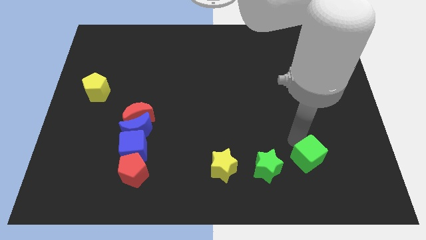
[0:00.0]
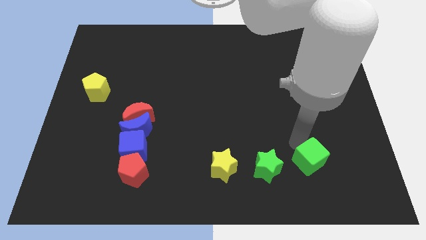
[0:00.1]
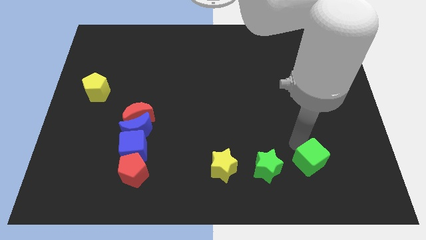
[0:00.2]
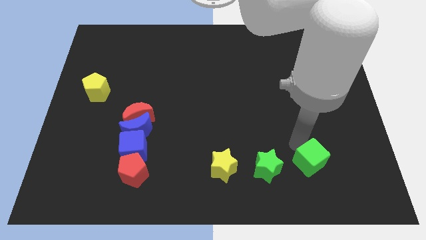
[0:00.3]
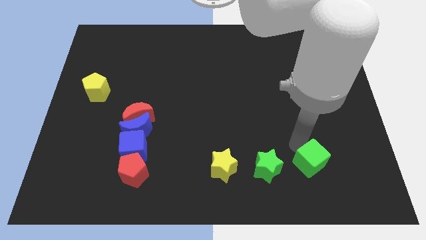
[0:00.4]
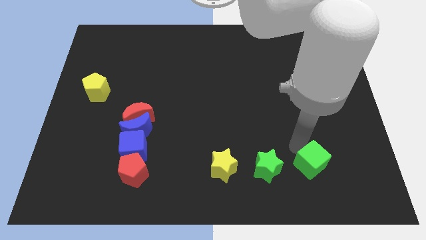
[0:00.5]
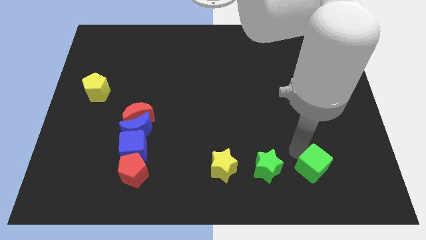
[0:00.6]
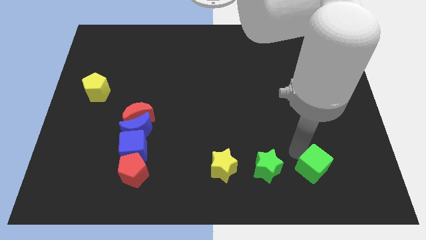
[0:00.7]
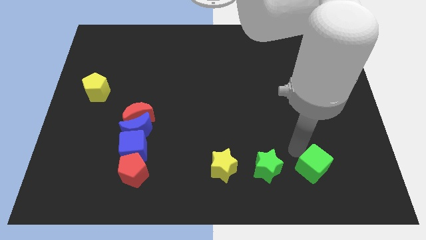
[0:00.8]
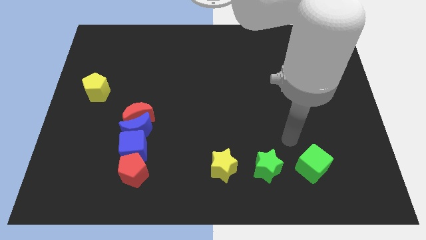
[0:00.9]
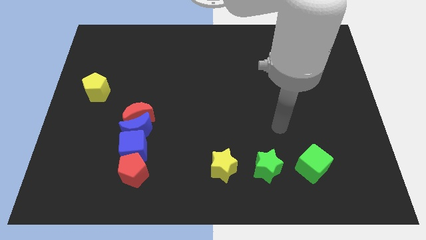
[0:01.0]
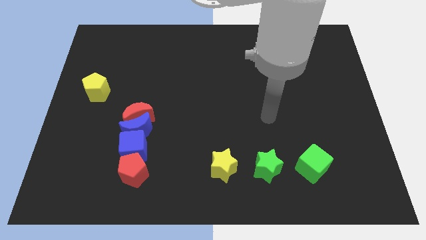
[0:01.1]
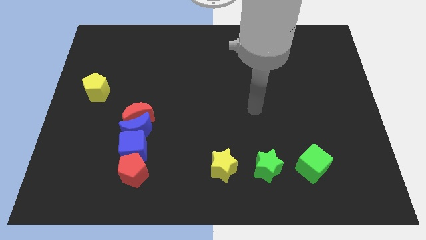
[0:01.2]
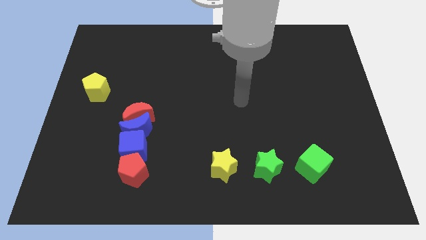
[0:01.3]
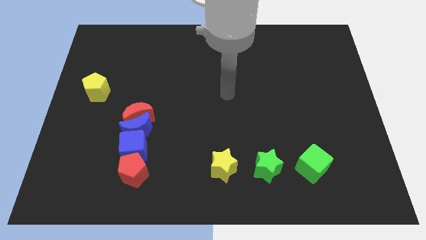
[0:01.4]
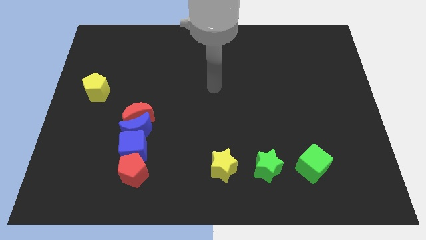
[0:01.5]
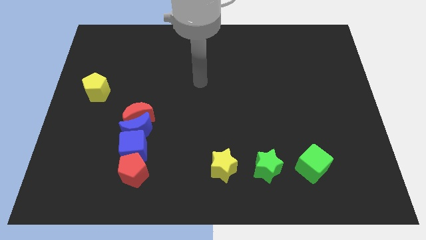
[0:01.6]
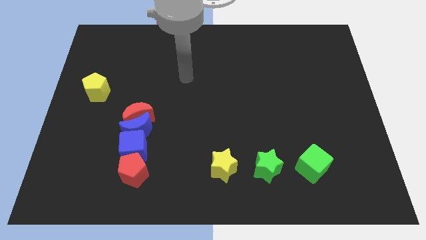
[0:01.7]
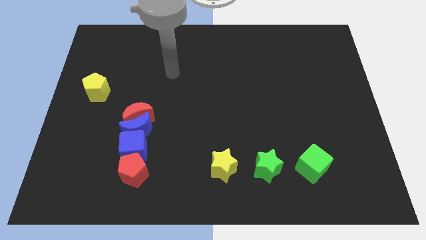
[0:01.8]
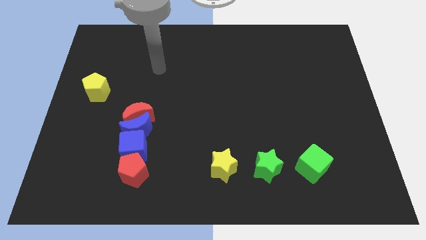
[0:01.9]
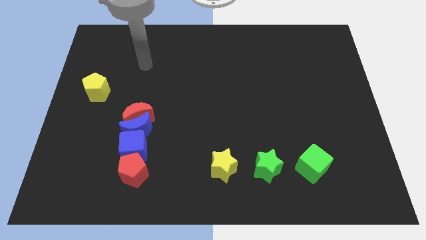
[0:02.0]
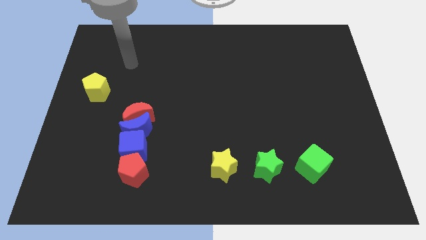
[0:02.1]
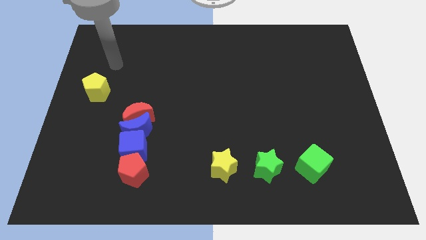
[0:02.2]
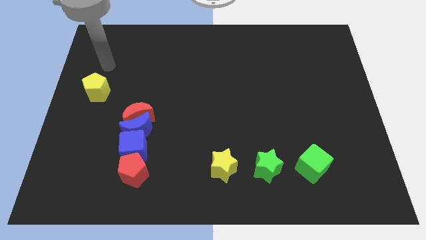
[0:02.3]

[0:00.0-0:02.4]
push the green cube beside green star

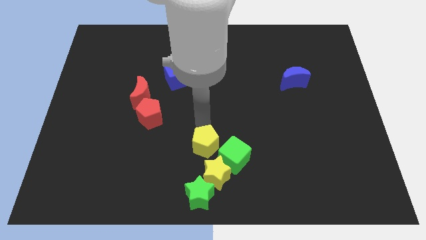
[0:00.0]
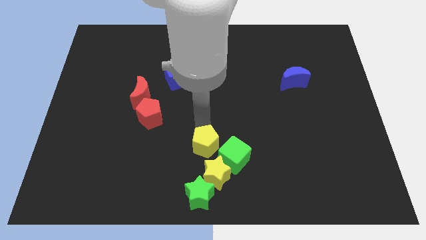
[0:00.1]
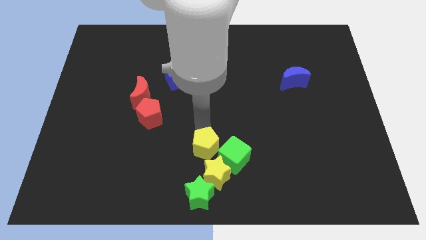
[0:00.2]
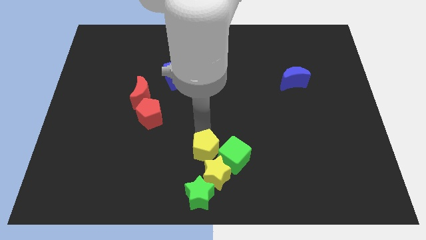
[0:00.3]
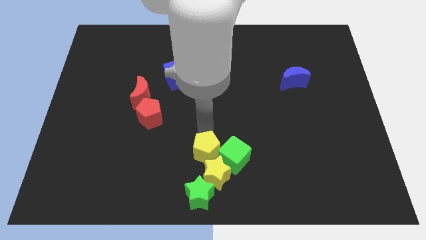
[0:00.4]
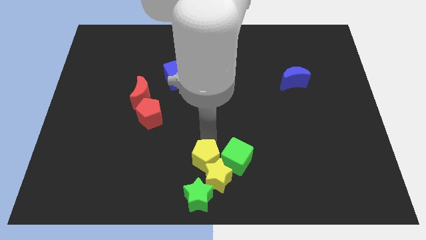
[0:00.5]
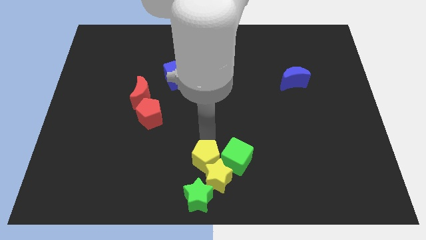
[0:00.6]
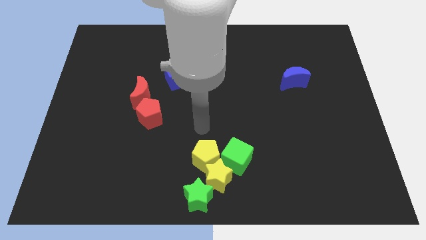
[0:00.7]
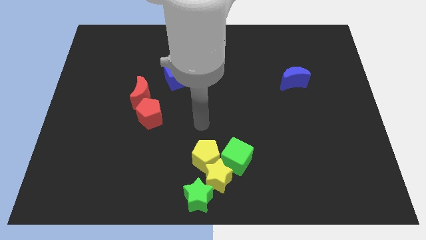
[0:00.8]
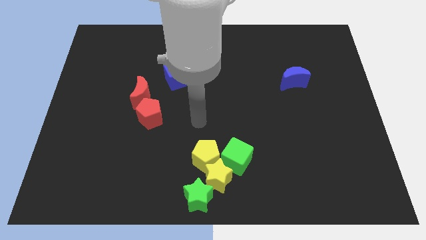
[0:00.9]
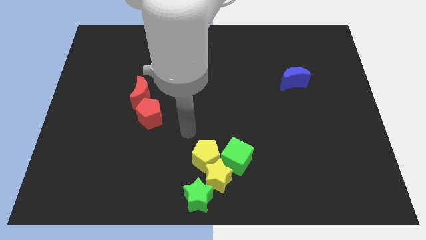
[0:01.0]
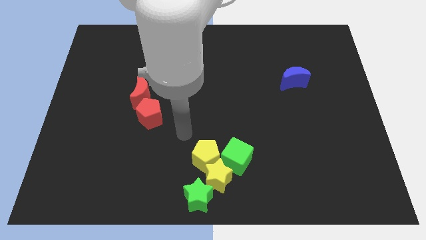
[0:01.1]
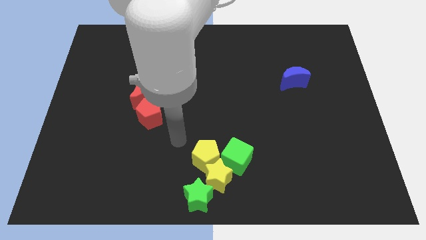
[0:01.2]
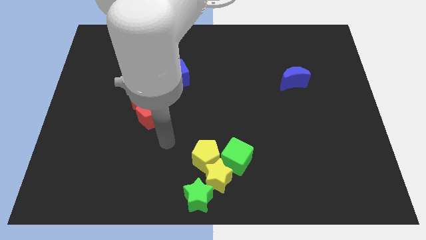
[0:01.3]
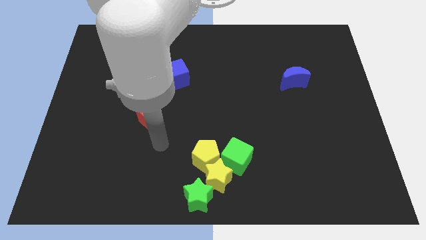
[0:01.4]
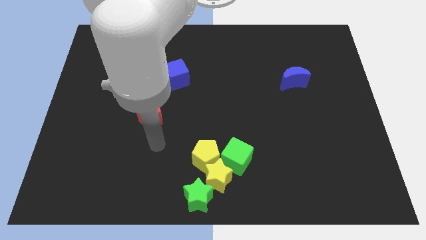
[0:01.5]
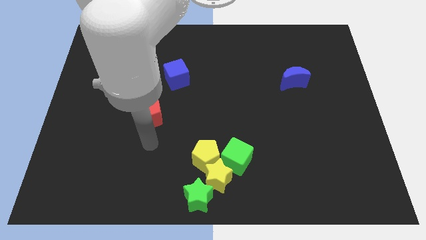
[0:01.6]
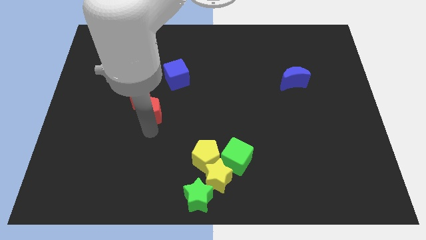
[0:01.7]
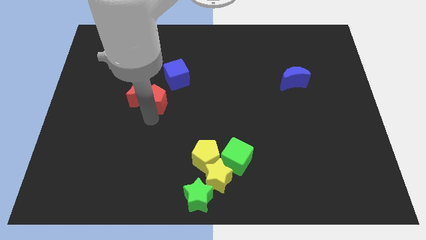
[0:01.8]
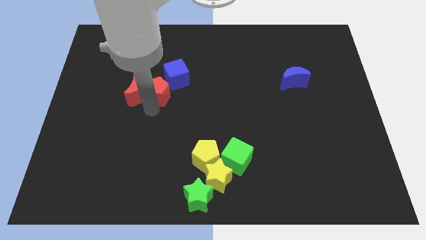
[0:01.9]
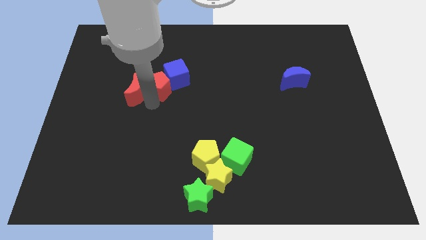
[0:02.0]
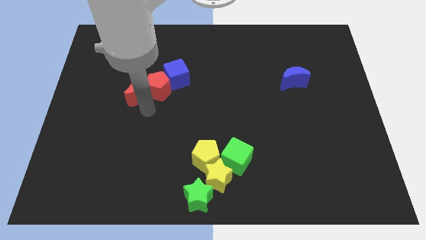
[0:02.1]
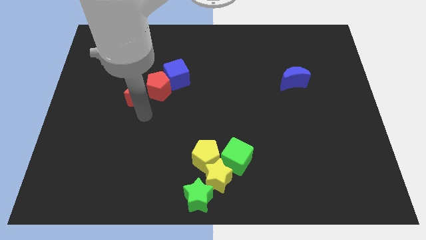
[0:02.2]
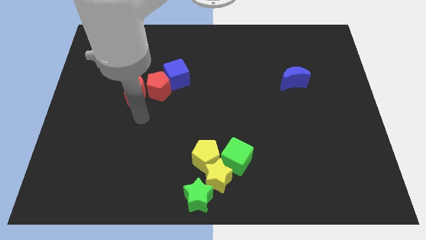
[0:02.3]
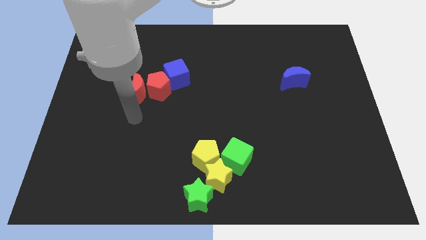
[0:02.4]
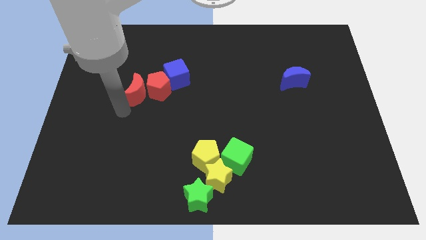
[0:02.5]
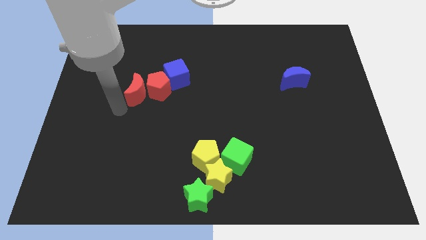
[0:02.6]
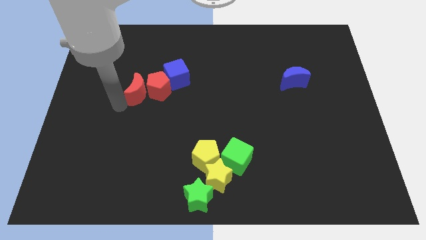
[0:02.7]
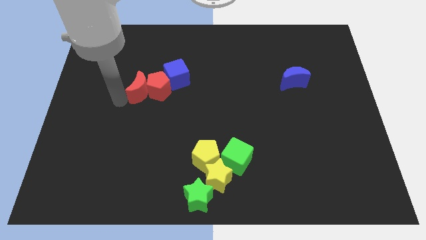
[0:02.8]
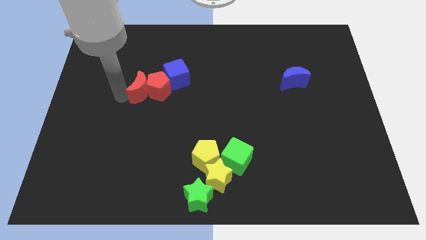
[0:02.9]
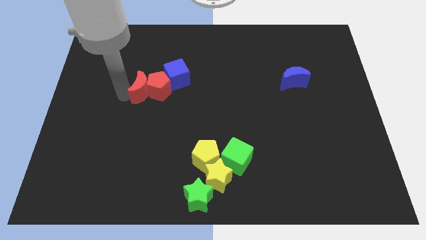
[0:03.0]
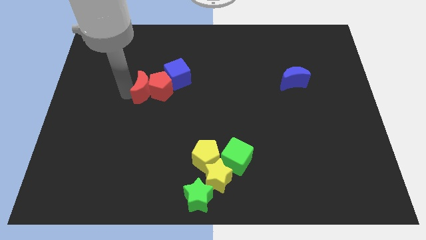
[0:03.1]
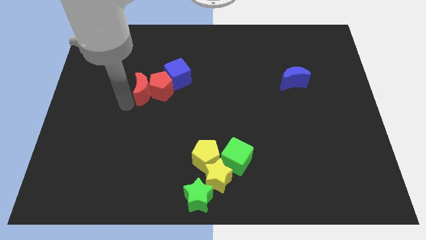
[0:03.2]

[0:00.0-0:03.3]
push the red pentagon in between the red crescent and blue cube

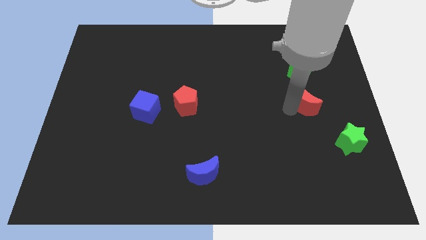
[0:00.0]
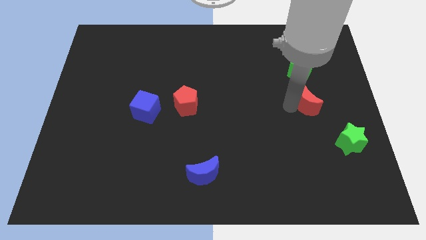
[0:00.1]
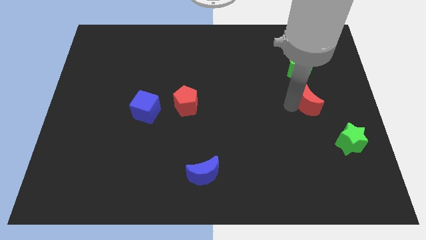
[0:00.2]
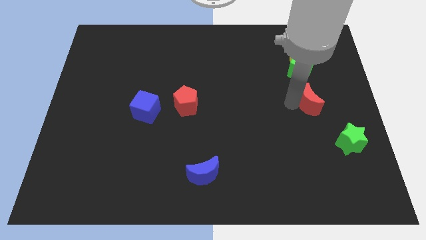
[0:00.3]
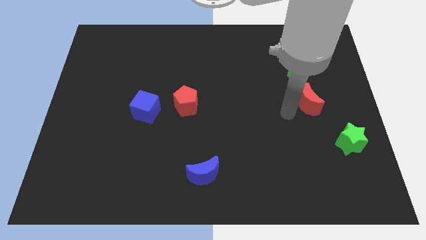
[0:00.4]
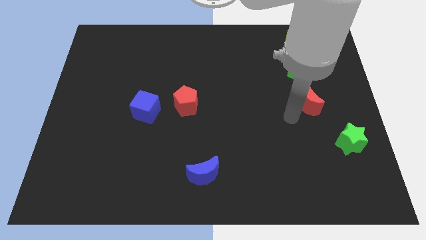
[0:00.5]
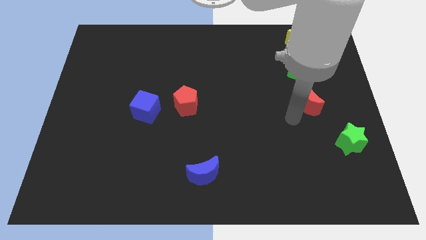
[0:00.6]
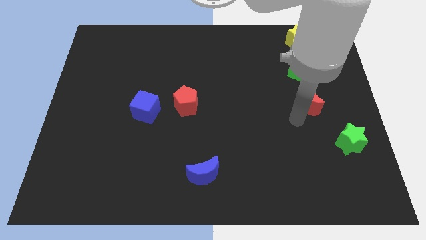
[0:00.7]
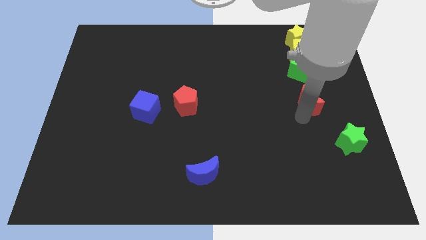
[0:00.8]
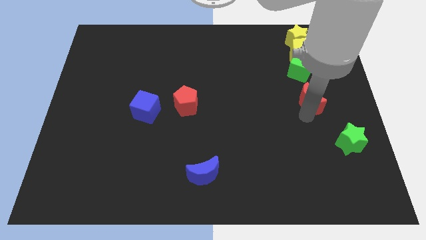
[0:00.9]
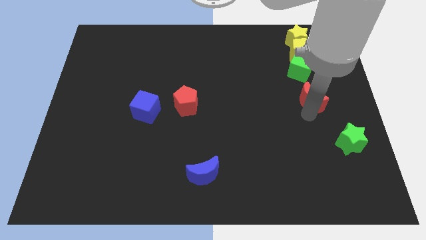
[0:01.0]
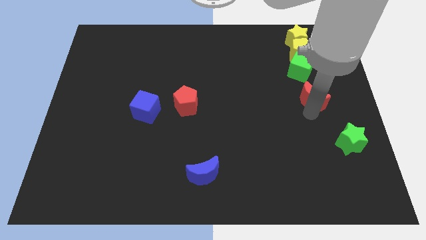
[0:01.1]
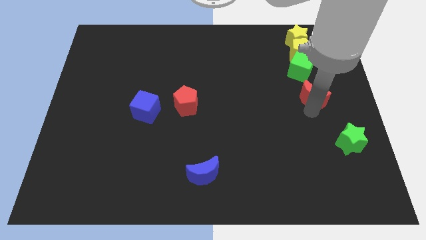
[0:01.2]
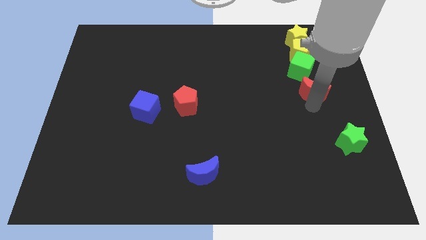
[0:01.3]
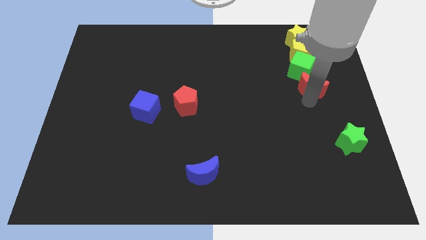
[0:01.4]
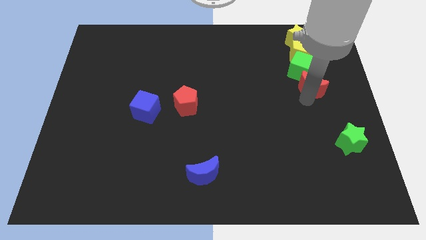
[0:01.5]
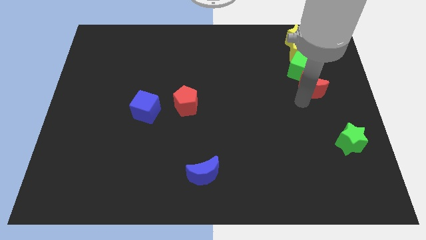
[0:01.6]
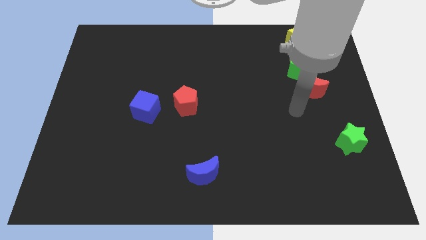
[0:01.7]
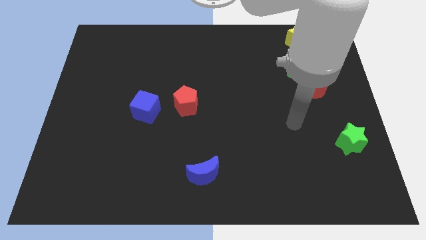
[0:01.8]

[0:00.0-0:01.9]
move the red moon close to green cube

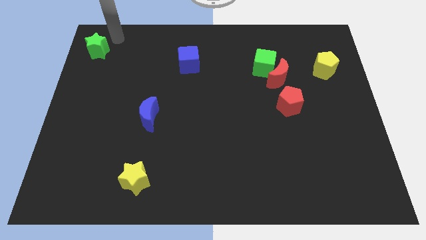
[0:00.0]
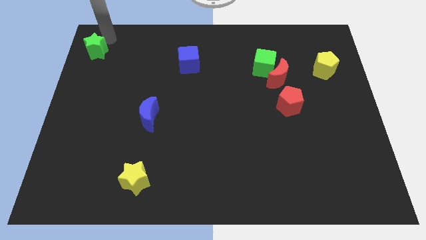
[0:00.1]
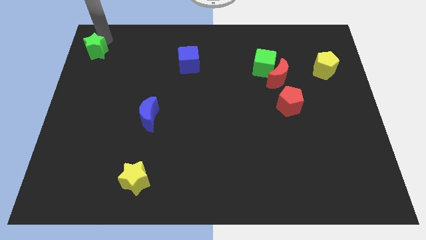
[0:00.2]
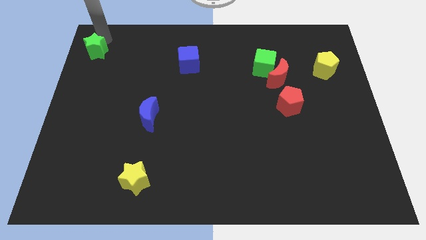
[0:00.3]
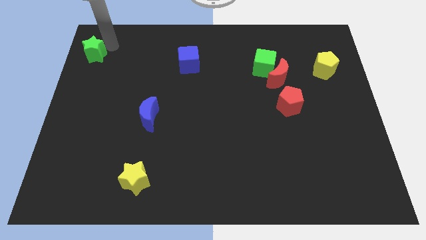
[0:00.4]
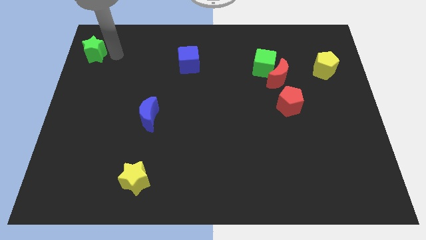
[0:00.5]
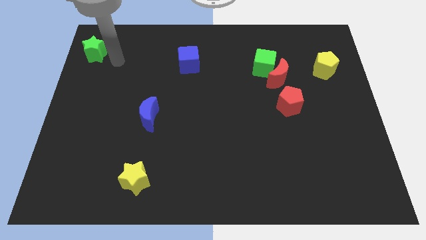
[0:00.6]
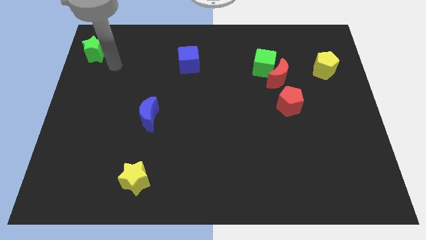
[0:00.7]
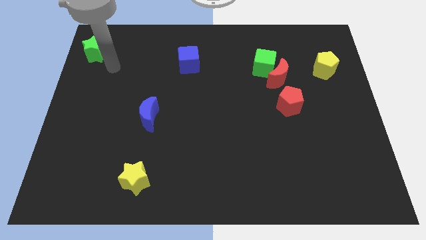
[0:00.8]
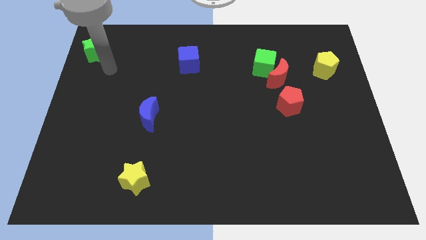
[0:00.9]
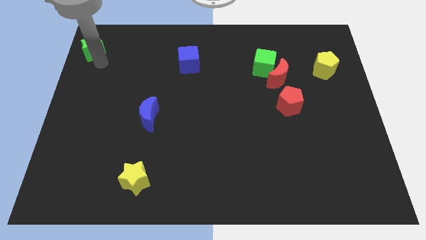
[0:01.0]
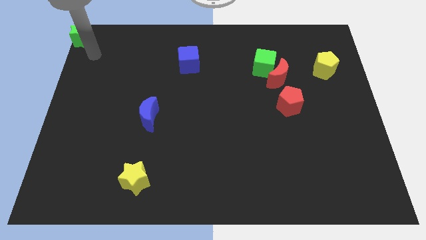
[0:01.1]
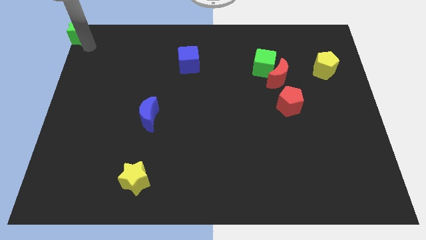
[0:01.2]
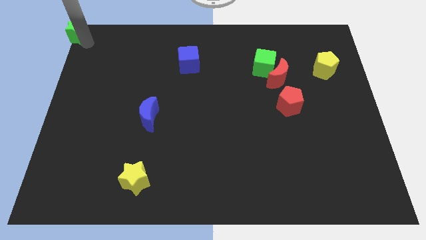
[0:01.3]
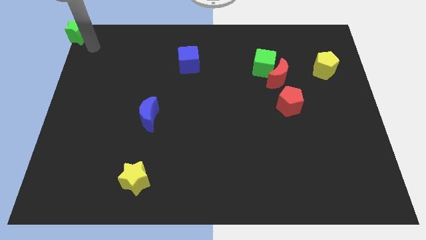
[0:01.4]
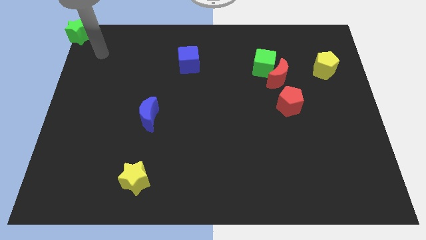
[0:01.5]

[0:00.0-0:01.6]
place the green star at the top left corner of the board
